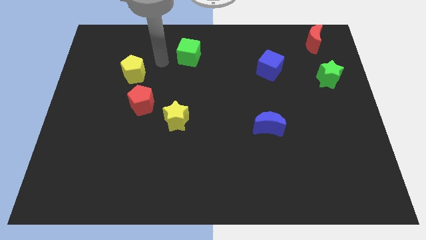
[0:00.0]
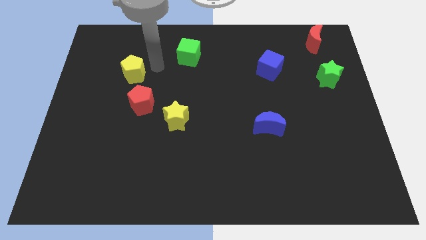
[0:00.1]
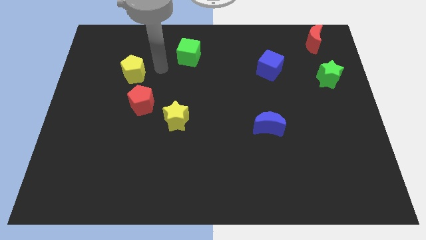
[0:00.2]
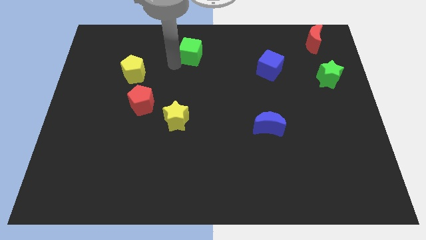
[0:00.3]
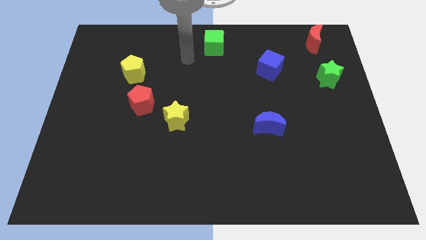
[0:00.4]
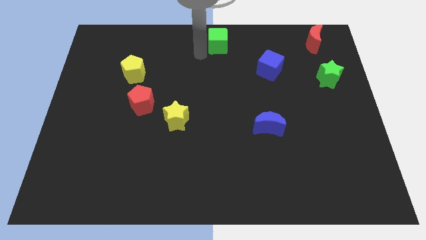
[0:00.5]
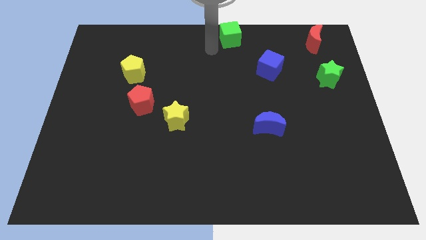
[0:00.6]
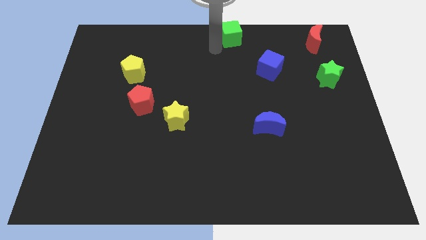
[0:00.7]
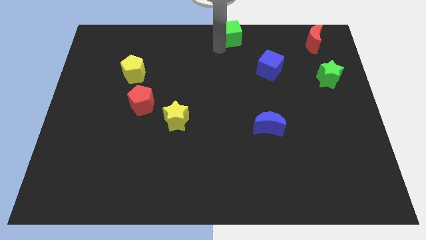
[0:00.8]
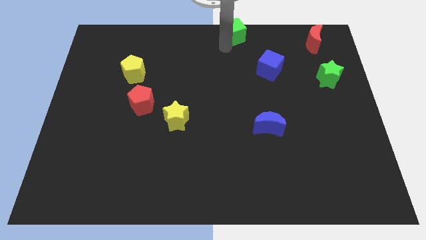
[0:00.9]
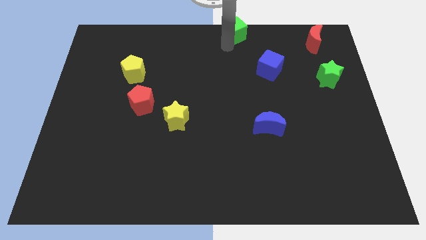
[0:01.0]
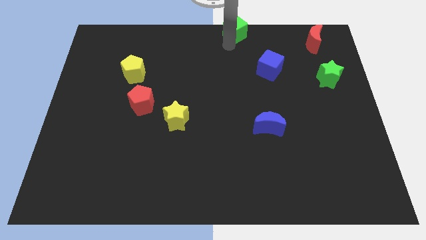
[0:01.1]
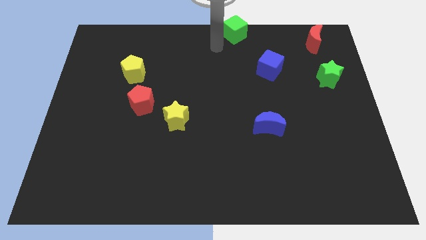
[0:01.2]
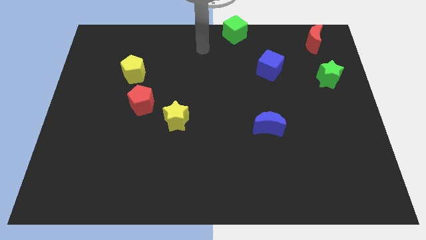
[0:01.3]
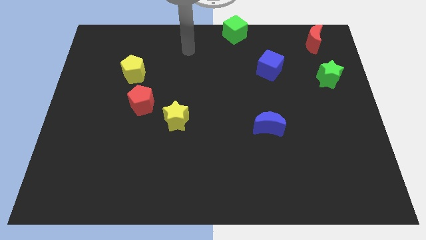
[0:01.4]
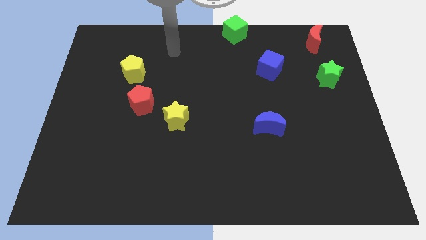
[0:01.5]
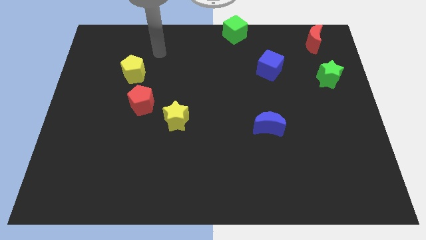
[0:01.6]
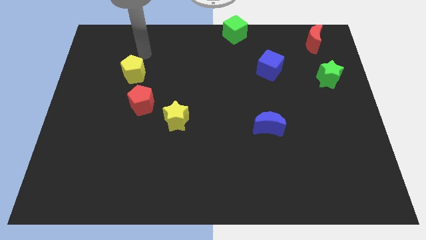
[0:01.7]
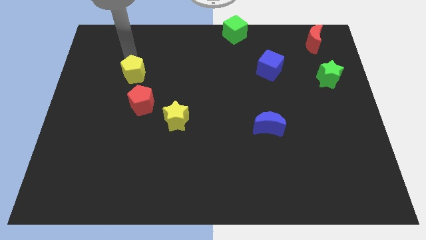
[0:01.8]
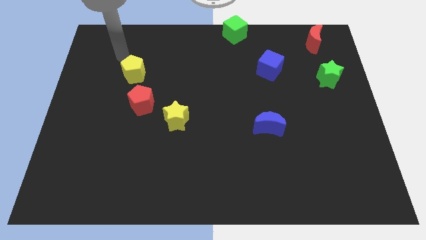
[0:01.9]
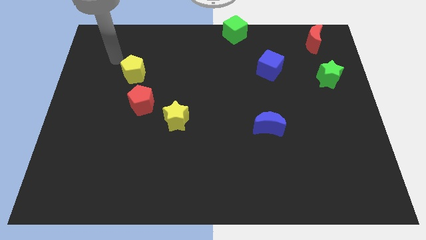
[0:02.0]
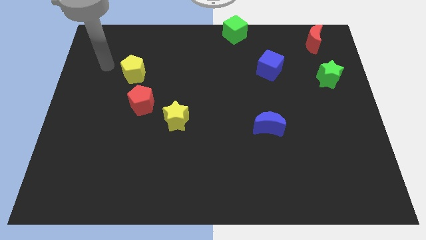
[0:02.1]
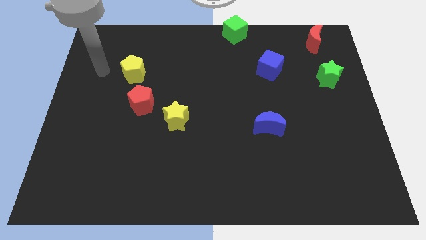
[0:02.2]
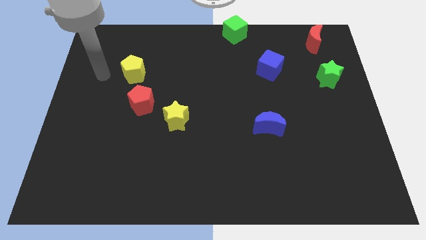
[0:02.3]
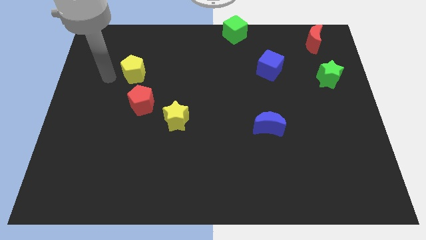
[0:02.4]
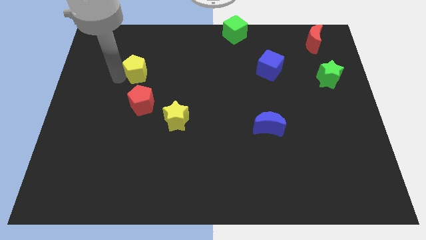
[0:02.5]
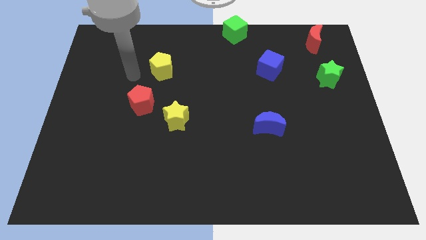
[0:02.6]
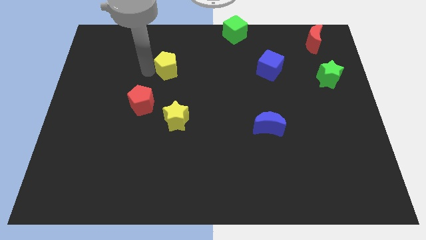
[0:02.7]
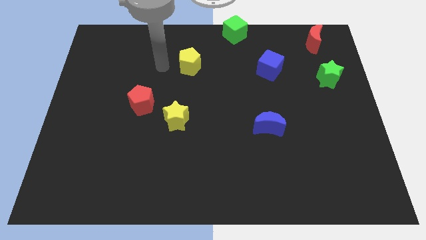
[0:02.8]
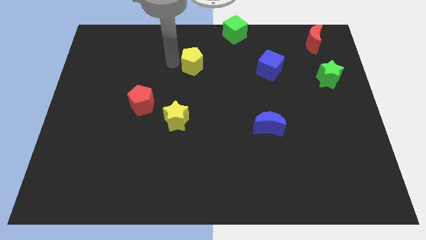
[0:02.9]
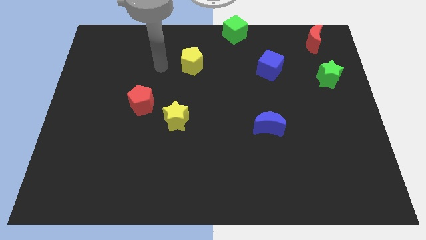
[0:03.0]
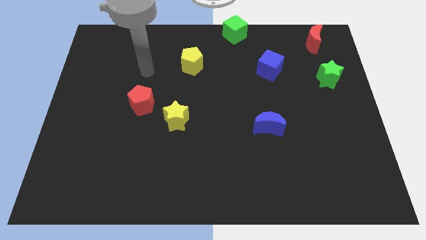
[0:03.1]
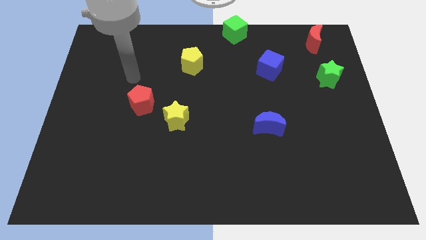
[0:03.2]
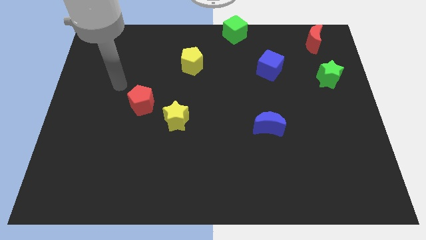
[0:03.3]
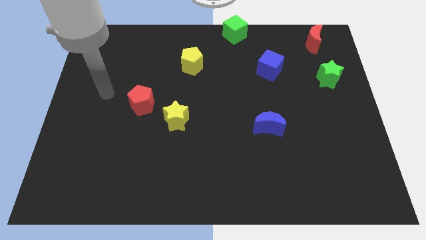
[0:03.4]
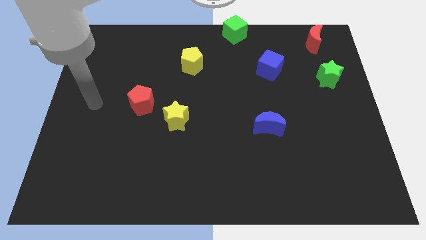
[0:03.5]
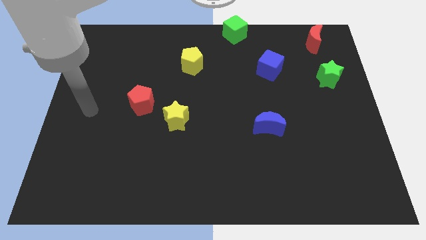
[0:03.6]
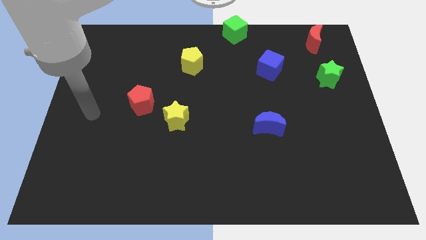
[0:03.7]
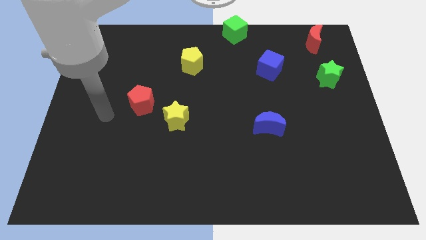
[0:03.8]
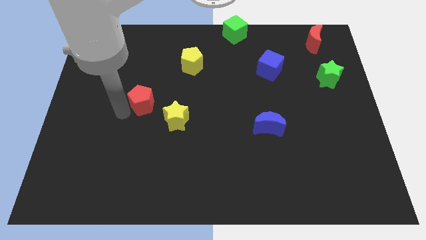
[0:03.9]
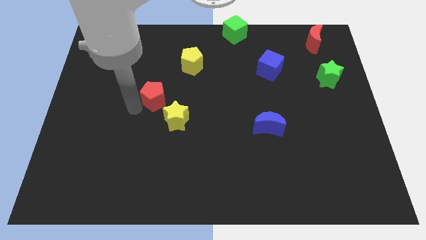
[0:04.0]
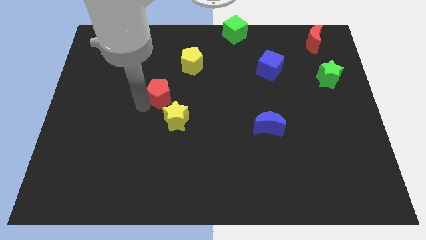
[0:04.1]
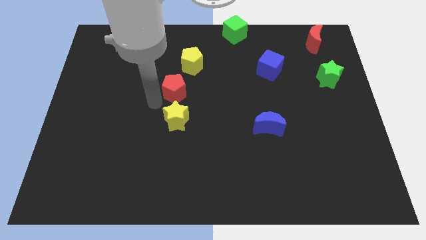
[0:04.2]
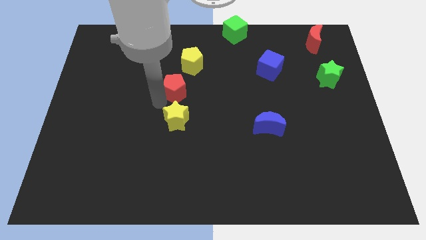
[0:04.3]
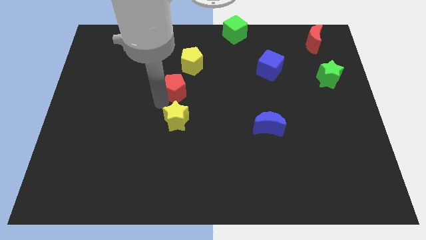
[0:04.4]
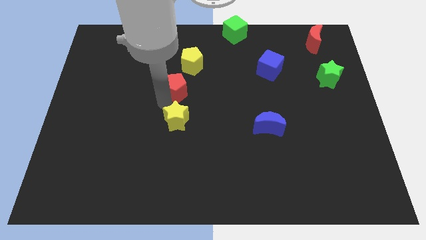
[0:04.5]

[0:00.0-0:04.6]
move the red pentagon vertically in between yellow pentagon and yellow star

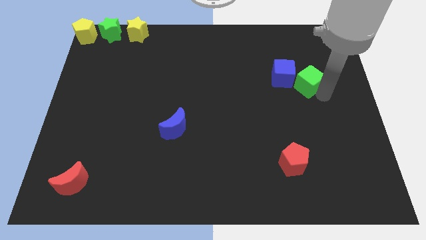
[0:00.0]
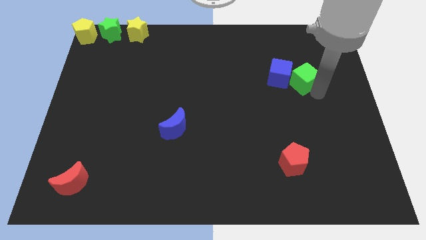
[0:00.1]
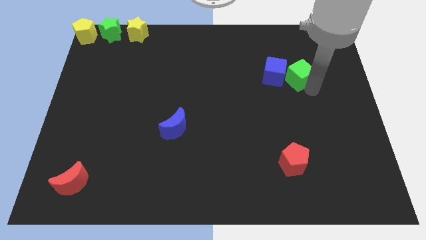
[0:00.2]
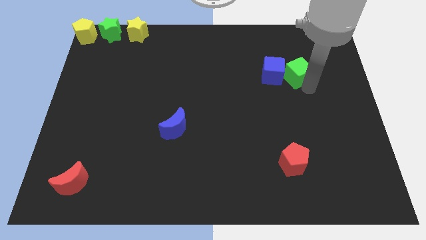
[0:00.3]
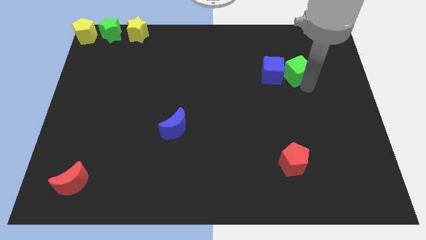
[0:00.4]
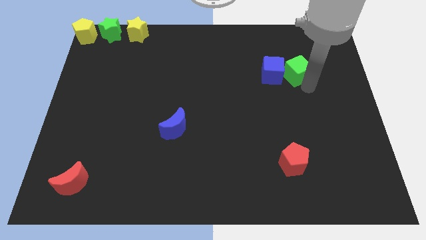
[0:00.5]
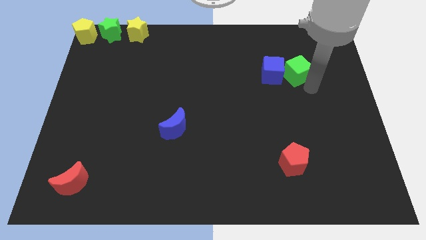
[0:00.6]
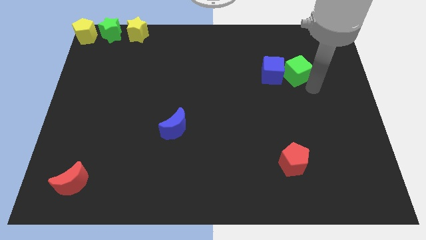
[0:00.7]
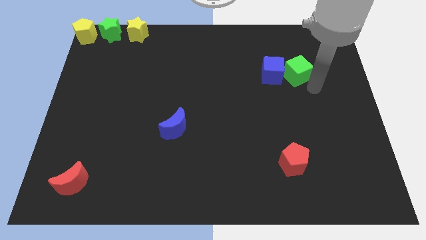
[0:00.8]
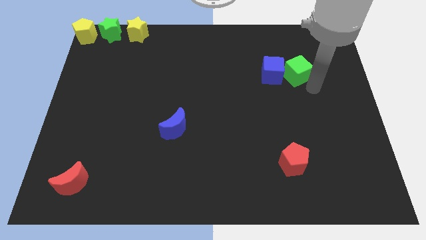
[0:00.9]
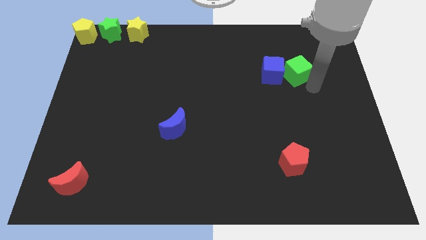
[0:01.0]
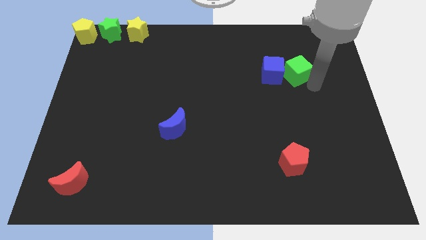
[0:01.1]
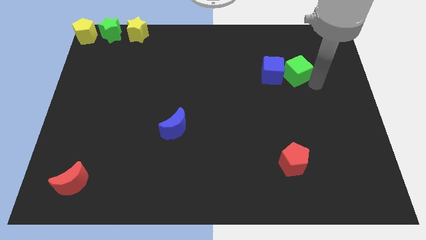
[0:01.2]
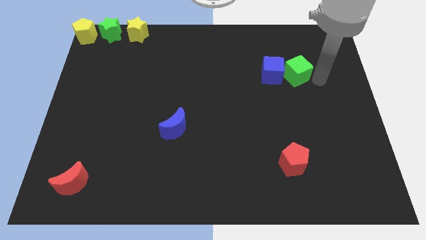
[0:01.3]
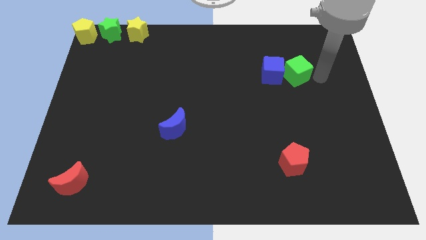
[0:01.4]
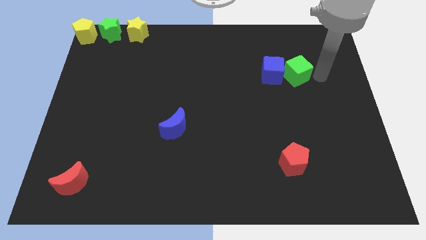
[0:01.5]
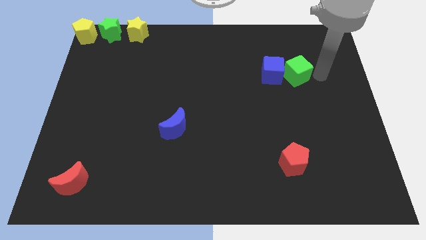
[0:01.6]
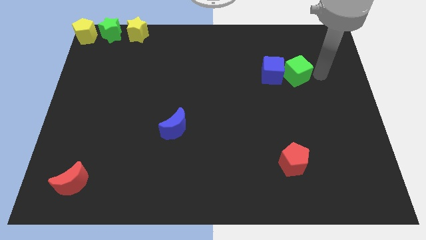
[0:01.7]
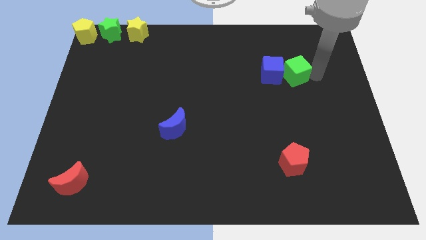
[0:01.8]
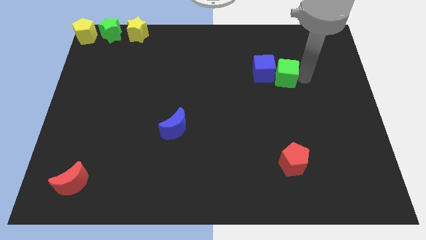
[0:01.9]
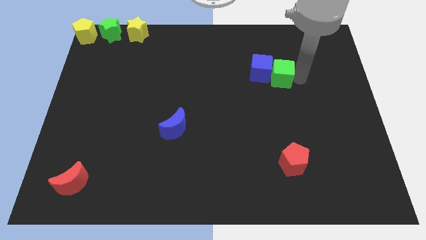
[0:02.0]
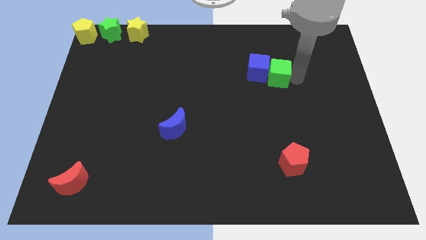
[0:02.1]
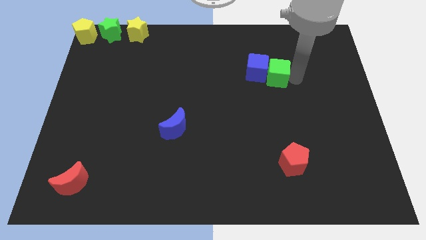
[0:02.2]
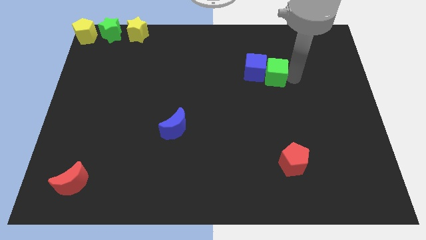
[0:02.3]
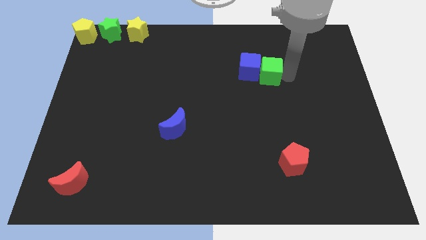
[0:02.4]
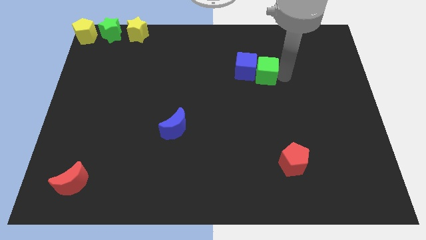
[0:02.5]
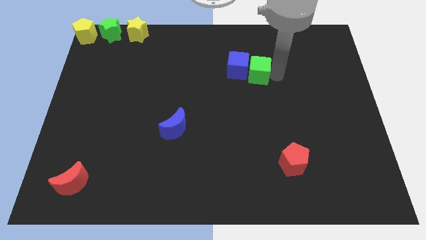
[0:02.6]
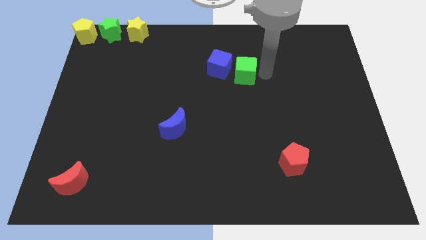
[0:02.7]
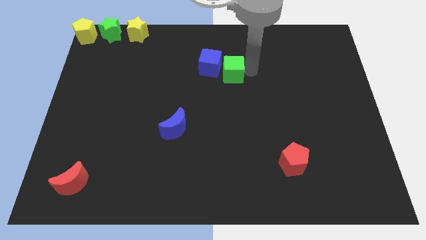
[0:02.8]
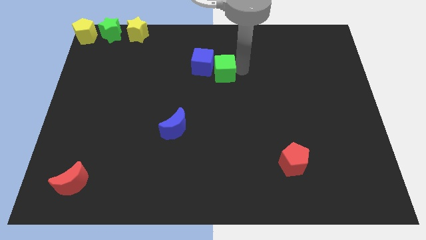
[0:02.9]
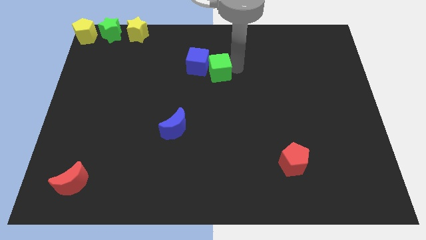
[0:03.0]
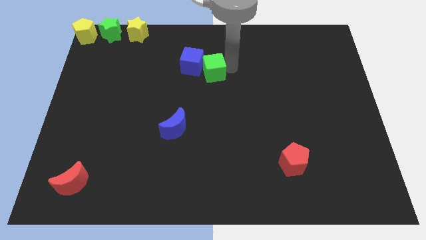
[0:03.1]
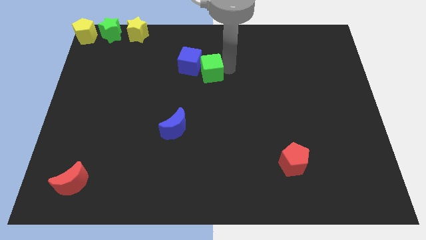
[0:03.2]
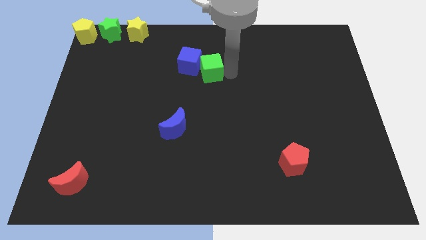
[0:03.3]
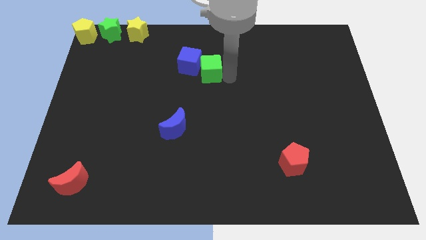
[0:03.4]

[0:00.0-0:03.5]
push the green cube along with blue cube towards the yellow star

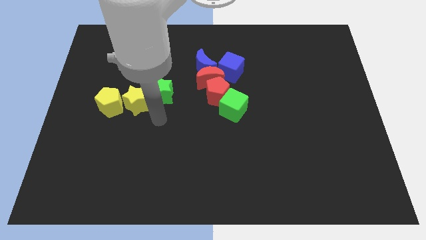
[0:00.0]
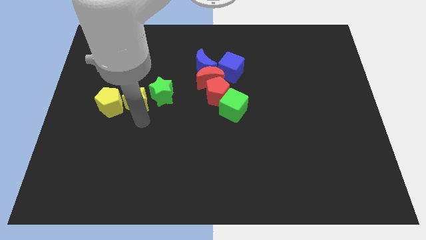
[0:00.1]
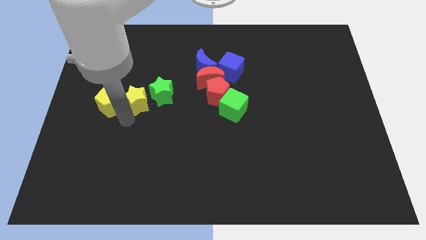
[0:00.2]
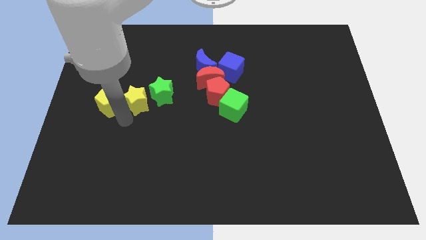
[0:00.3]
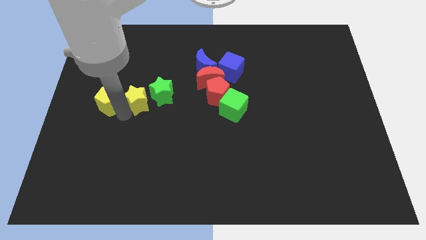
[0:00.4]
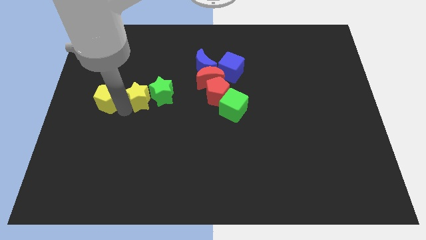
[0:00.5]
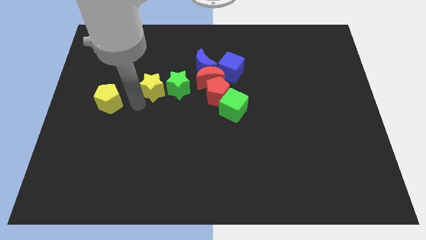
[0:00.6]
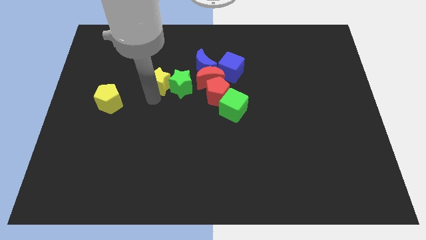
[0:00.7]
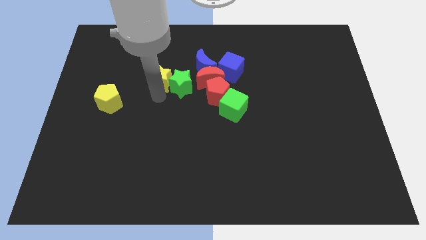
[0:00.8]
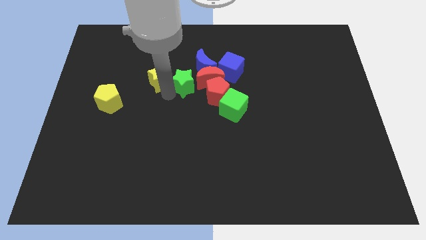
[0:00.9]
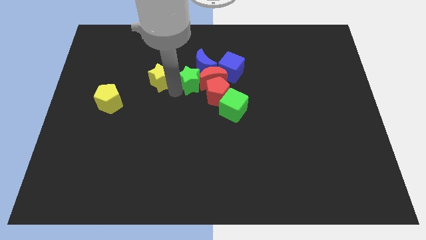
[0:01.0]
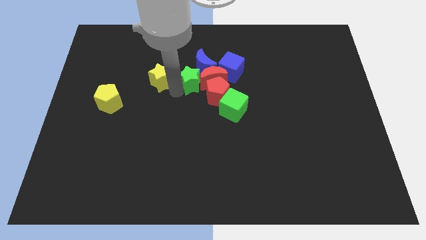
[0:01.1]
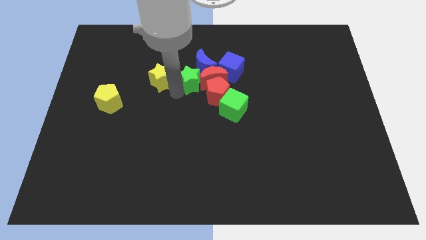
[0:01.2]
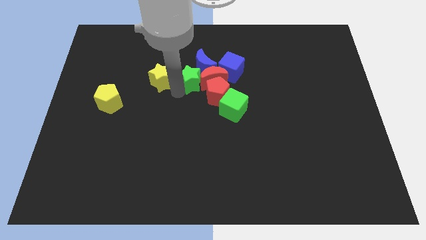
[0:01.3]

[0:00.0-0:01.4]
push the yellow star into the green star
